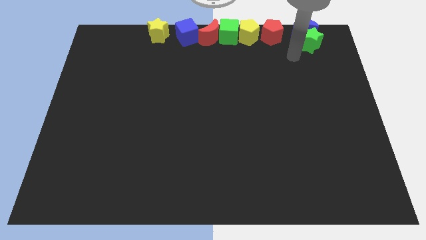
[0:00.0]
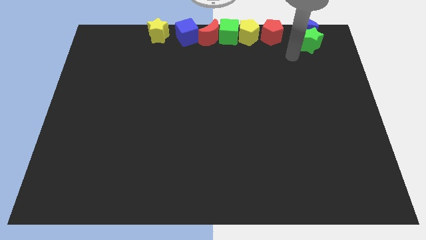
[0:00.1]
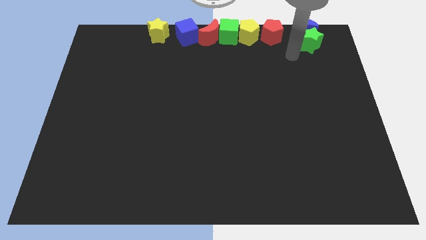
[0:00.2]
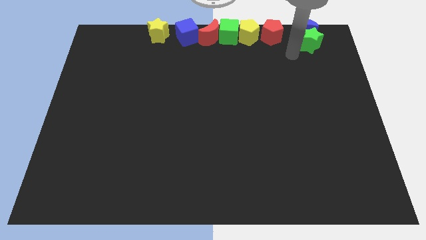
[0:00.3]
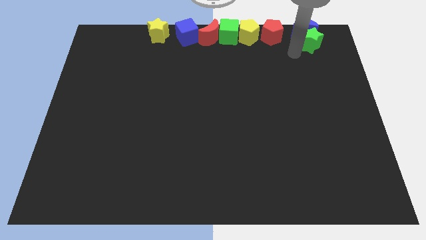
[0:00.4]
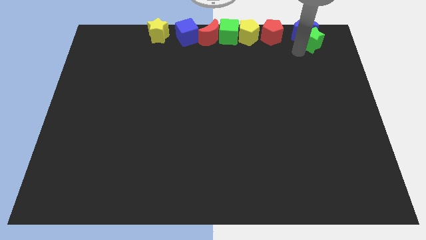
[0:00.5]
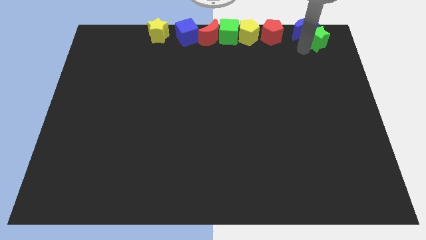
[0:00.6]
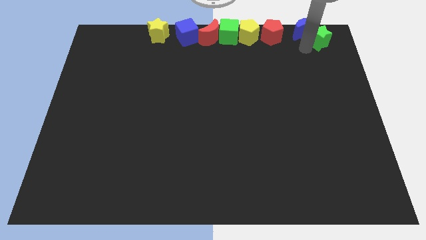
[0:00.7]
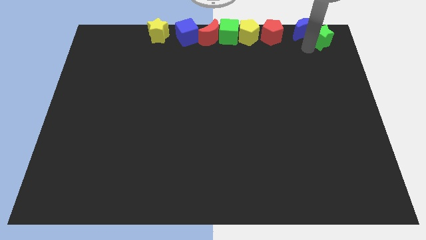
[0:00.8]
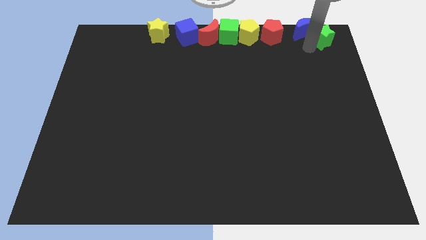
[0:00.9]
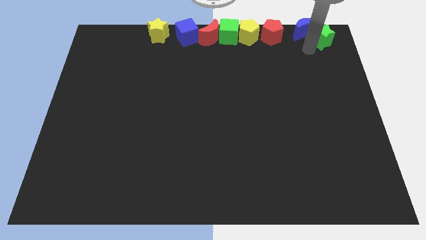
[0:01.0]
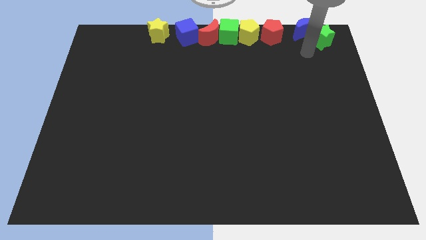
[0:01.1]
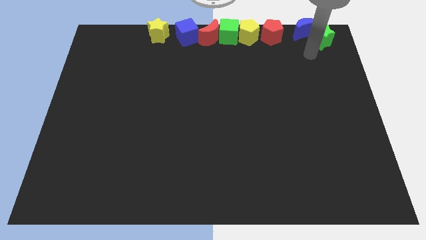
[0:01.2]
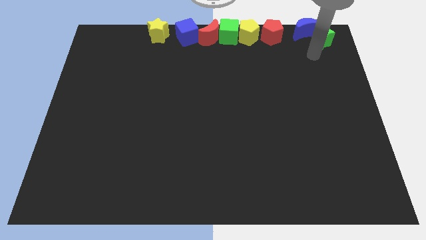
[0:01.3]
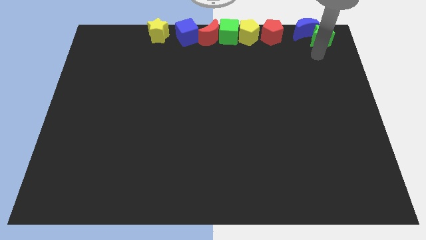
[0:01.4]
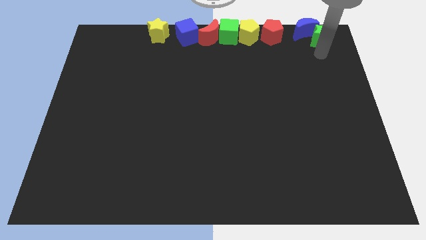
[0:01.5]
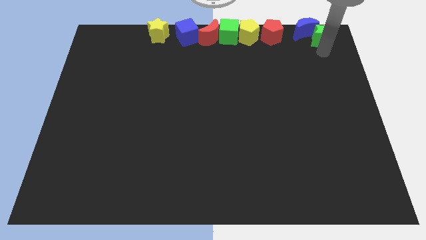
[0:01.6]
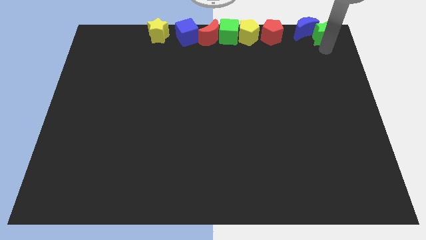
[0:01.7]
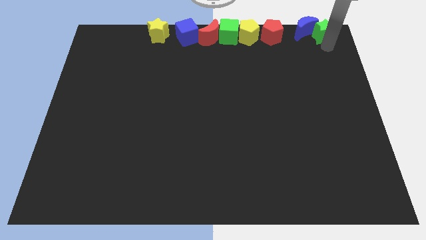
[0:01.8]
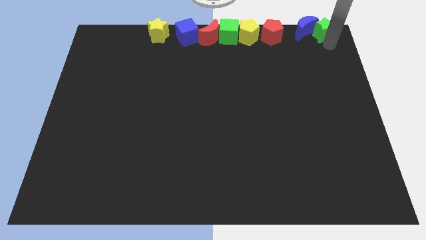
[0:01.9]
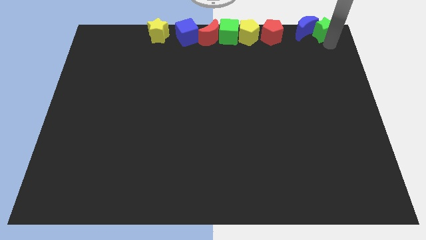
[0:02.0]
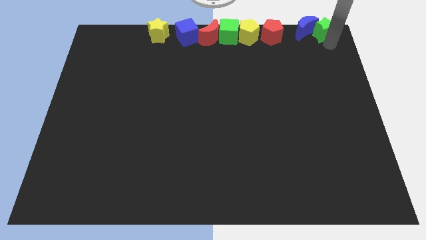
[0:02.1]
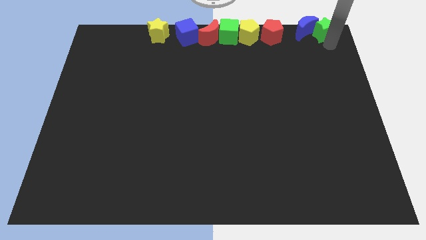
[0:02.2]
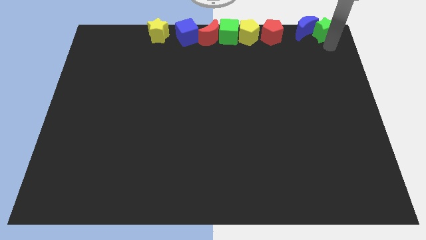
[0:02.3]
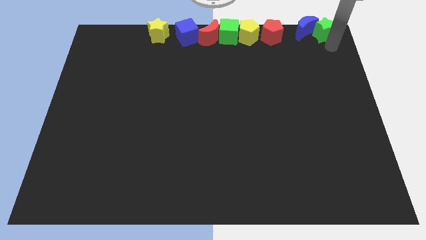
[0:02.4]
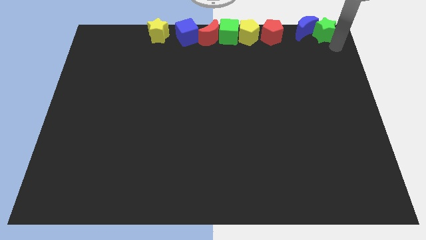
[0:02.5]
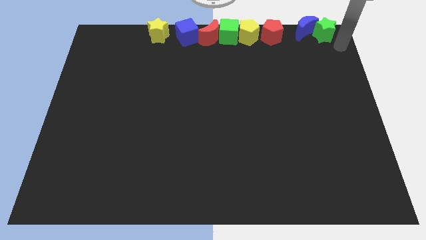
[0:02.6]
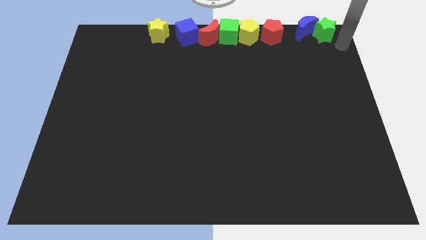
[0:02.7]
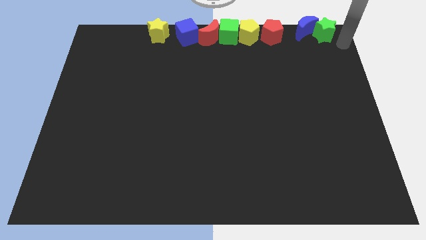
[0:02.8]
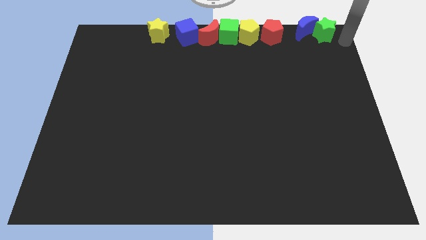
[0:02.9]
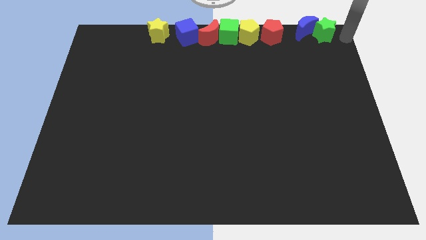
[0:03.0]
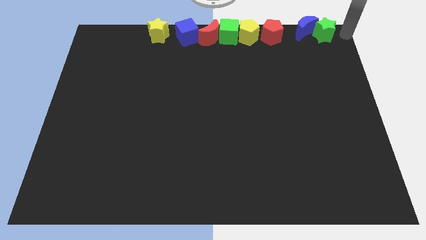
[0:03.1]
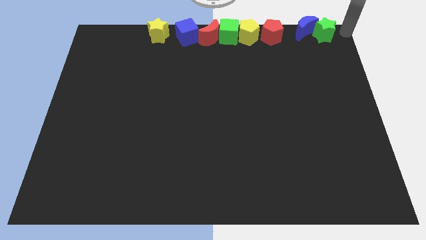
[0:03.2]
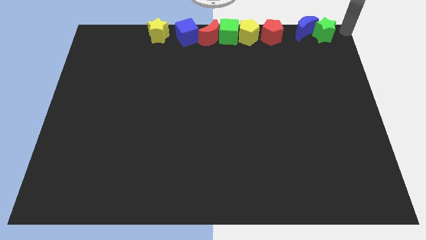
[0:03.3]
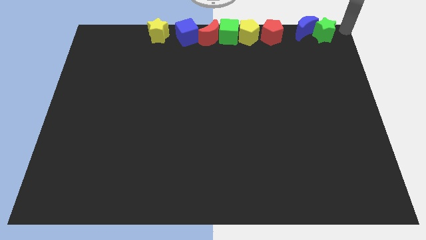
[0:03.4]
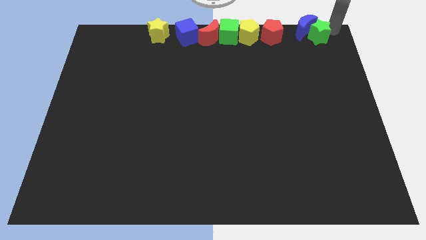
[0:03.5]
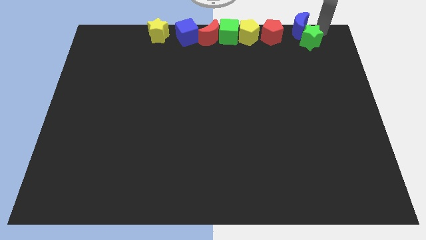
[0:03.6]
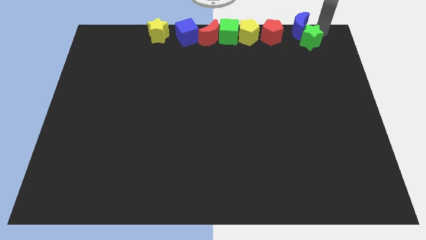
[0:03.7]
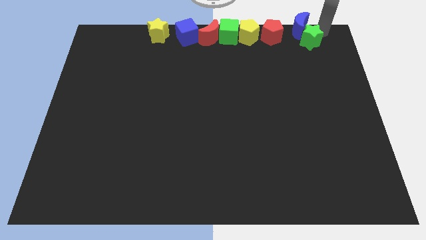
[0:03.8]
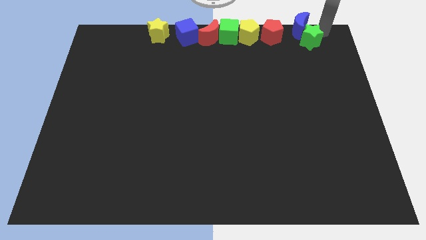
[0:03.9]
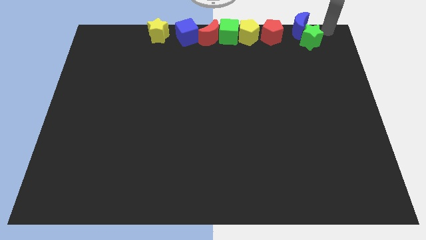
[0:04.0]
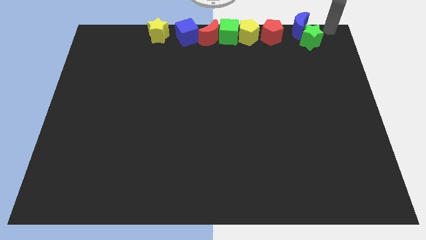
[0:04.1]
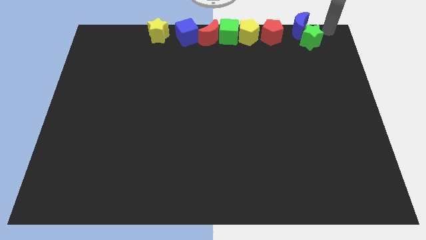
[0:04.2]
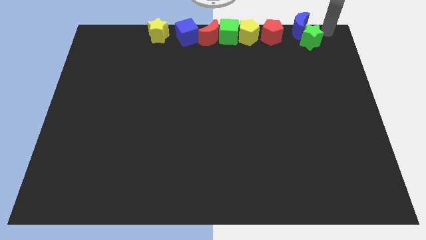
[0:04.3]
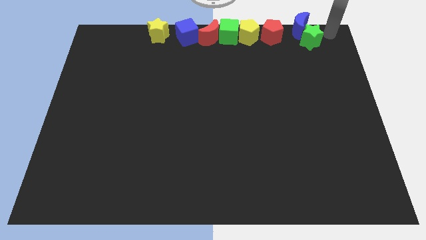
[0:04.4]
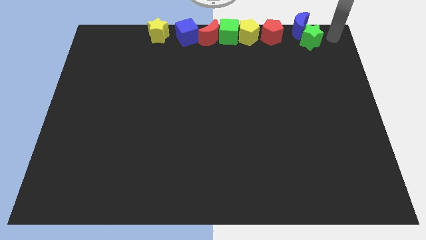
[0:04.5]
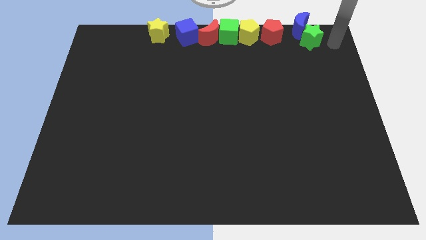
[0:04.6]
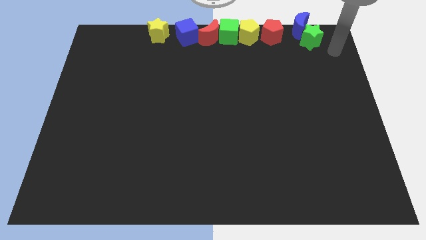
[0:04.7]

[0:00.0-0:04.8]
move the green star to the right side of the blue moon

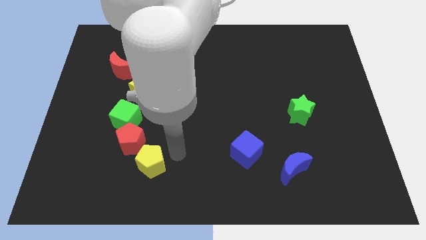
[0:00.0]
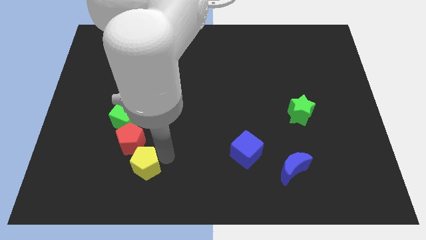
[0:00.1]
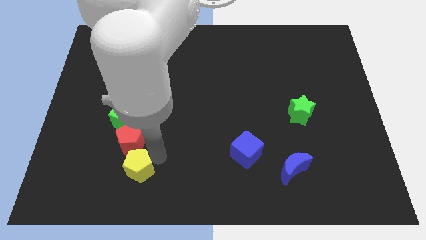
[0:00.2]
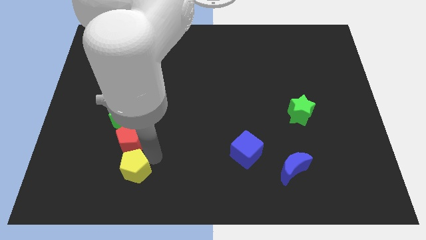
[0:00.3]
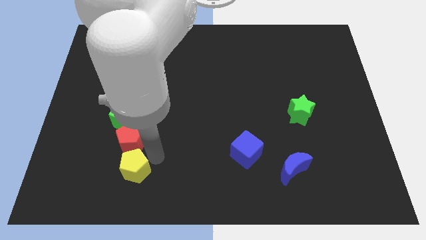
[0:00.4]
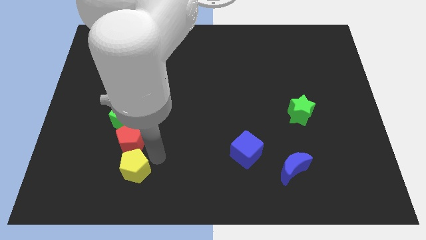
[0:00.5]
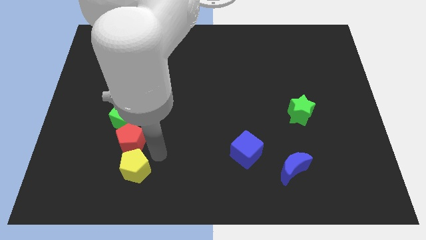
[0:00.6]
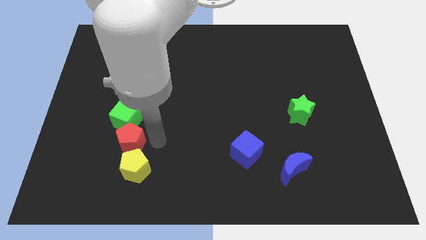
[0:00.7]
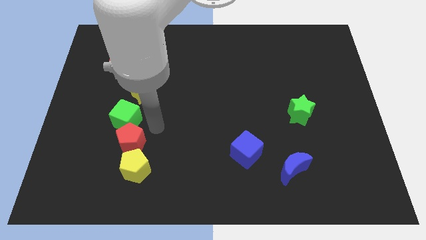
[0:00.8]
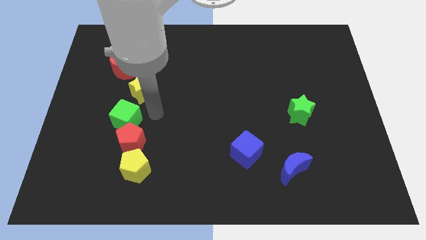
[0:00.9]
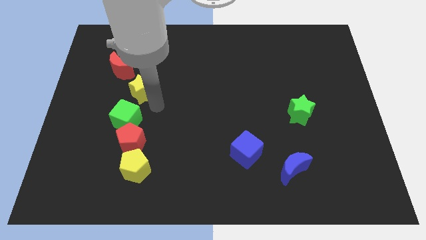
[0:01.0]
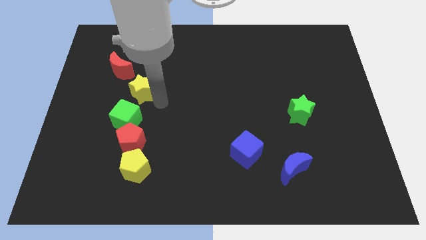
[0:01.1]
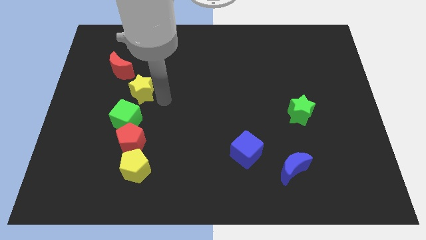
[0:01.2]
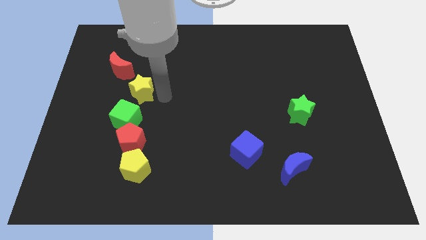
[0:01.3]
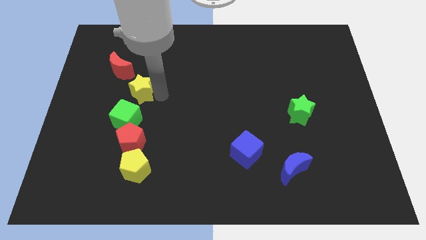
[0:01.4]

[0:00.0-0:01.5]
place the yellow pentagon below the red pentagon

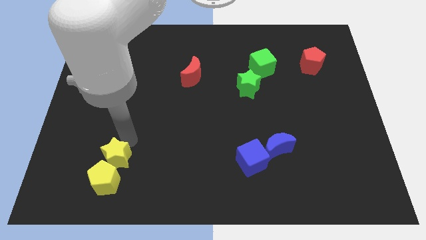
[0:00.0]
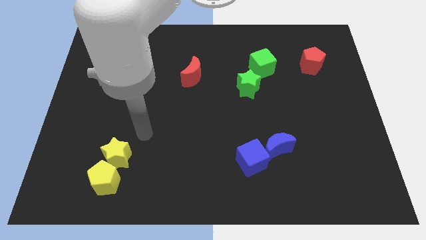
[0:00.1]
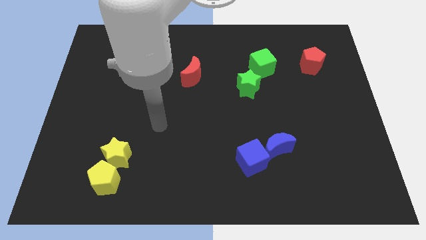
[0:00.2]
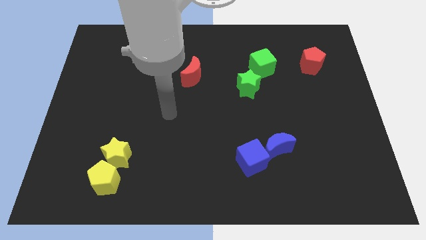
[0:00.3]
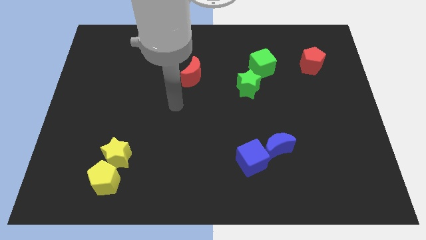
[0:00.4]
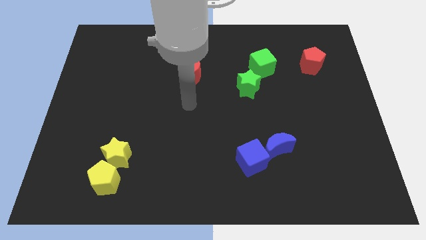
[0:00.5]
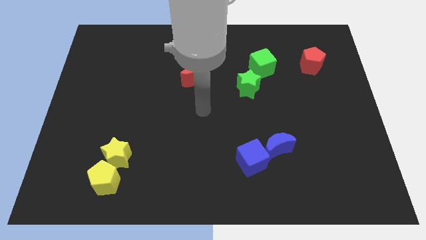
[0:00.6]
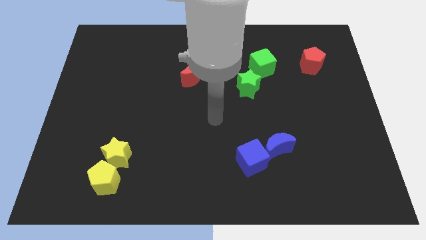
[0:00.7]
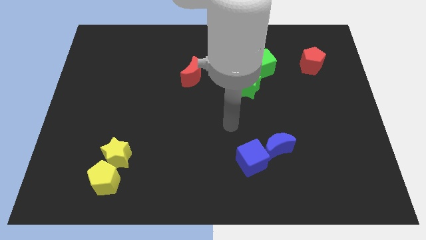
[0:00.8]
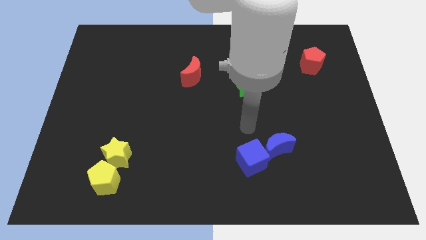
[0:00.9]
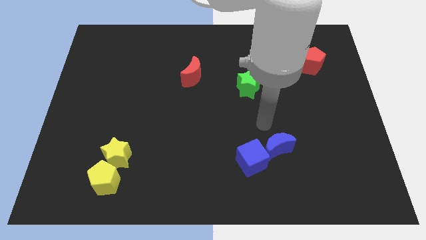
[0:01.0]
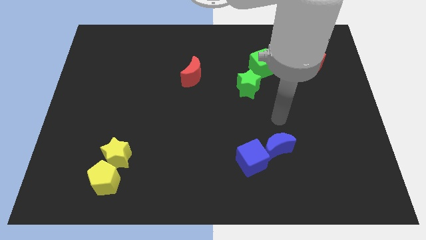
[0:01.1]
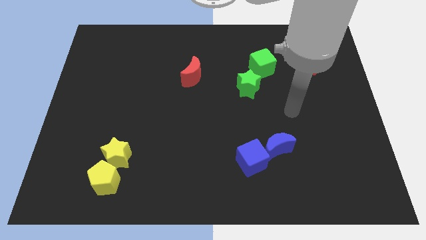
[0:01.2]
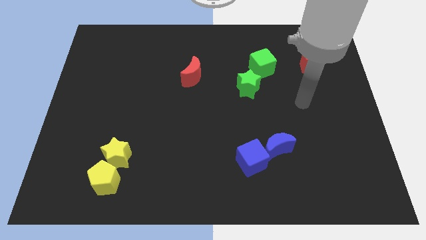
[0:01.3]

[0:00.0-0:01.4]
move your arm away from the yellow star

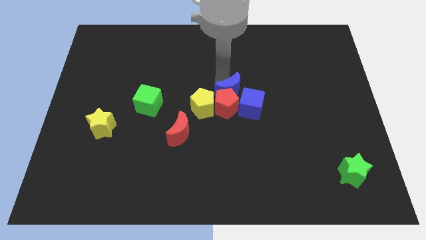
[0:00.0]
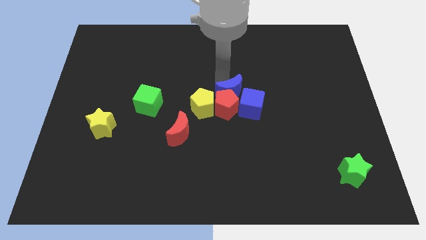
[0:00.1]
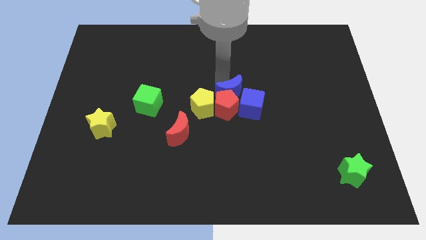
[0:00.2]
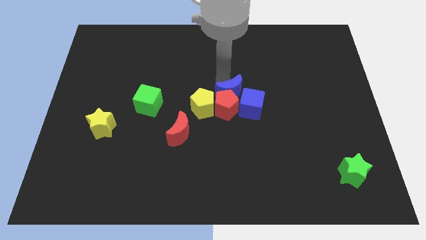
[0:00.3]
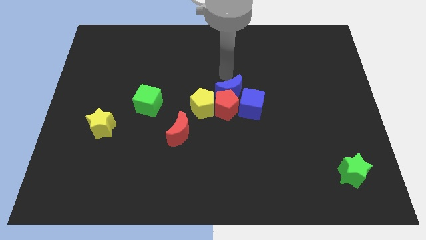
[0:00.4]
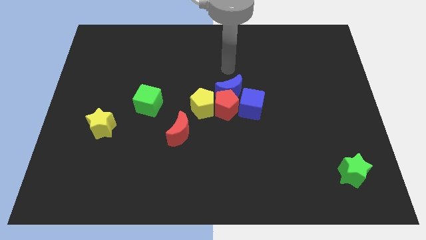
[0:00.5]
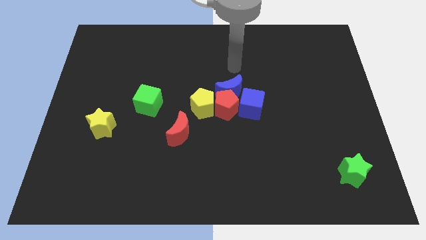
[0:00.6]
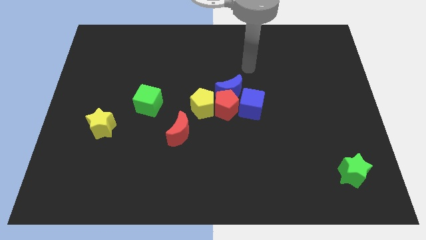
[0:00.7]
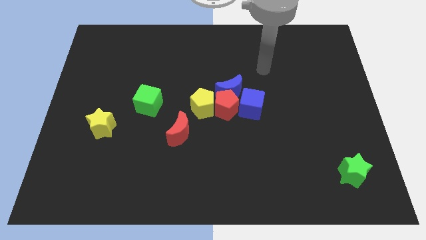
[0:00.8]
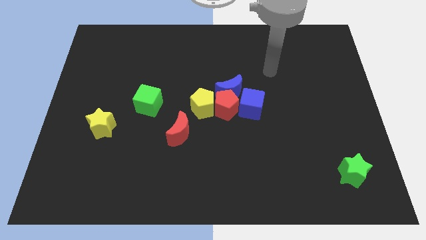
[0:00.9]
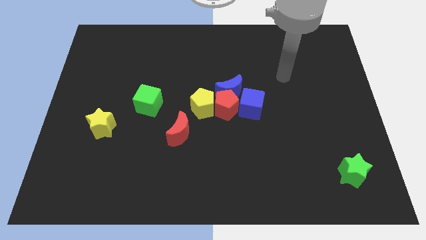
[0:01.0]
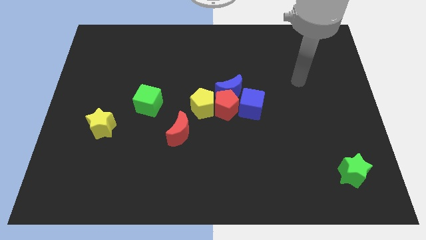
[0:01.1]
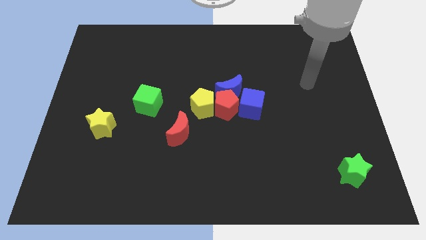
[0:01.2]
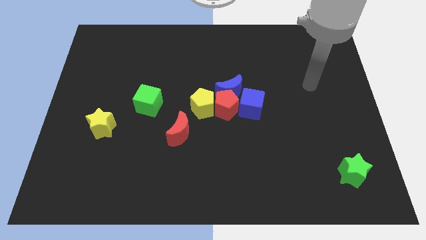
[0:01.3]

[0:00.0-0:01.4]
move your arm towards the right centre of the board
